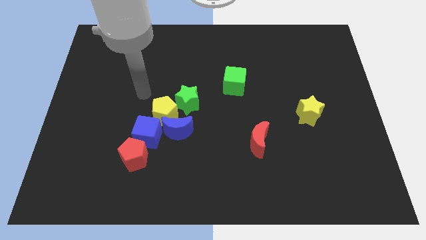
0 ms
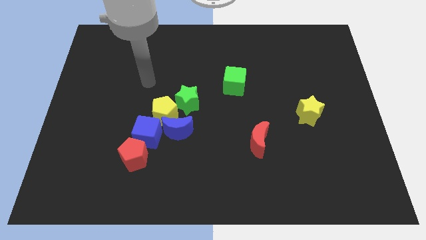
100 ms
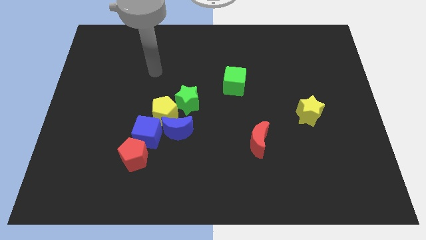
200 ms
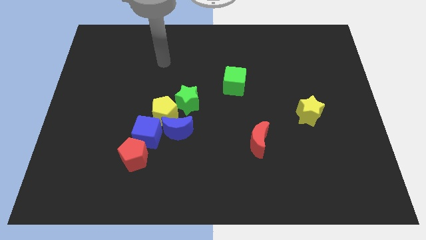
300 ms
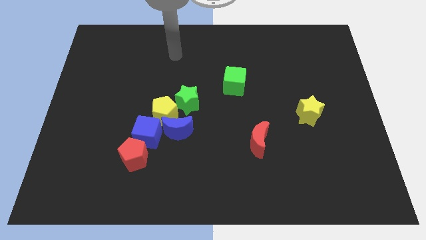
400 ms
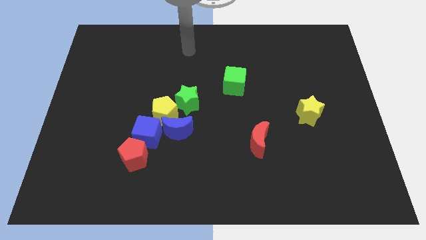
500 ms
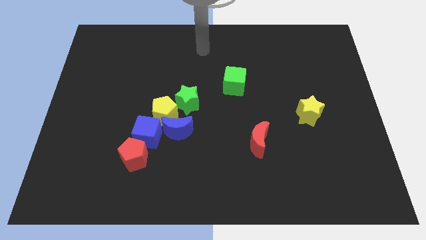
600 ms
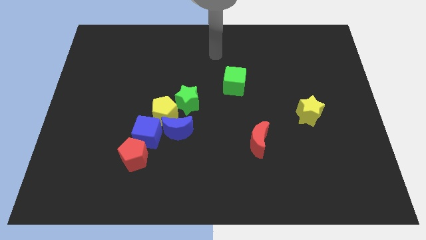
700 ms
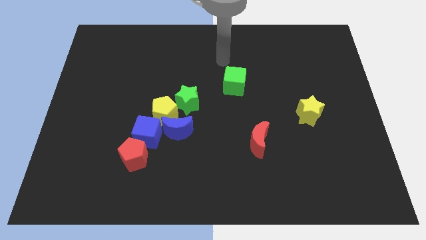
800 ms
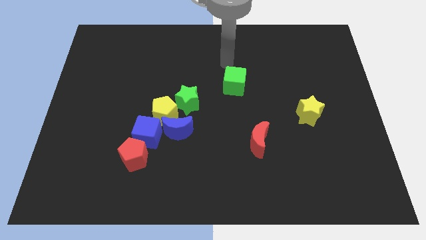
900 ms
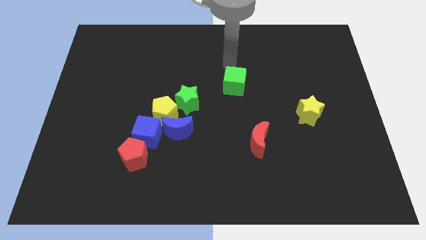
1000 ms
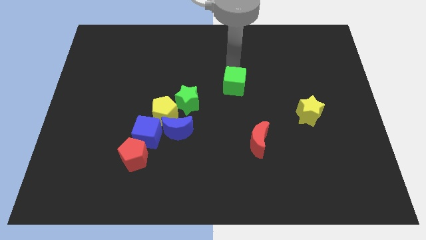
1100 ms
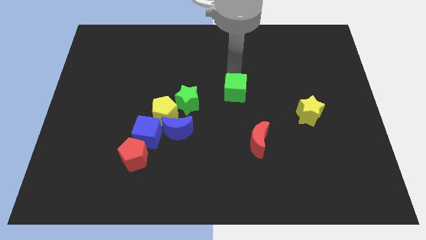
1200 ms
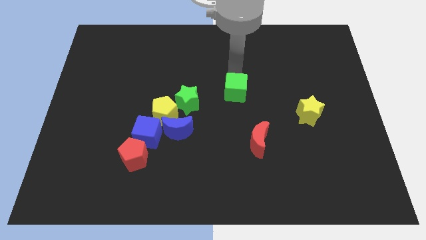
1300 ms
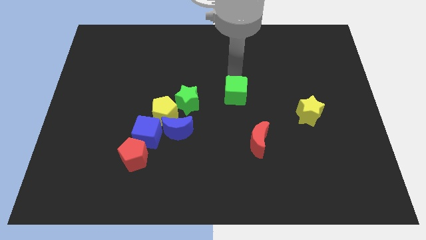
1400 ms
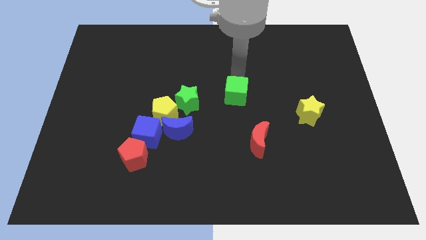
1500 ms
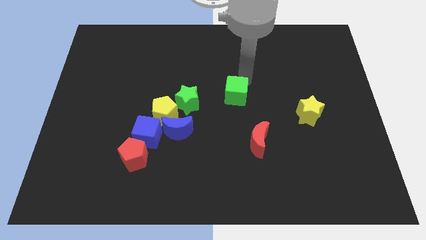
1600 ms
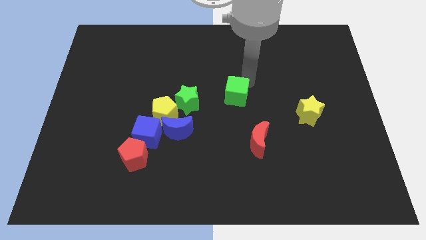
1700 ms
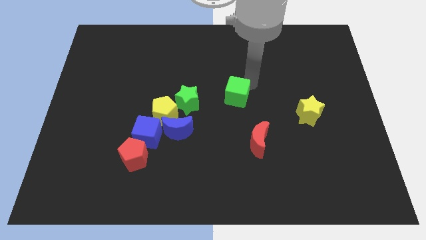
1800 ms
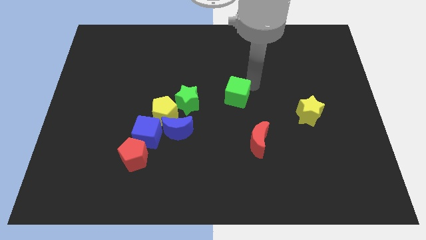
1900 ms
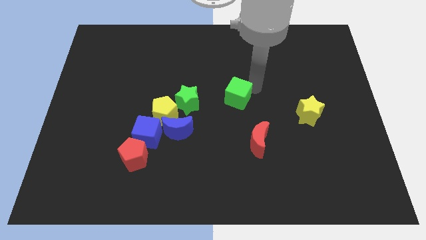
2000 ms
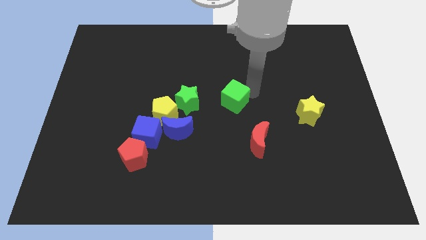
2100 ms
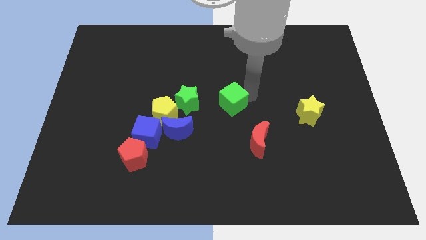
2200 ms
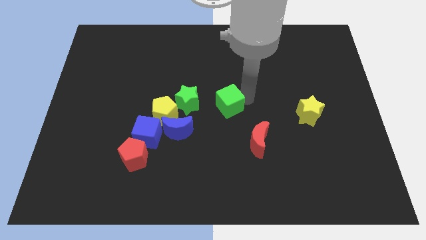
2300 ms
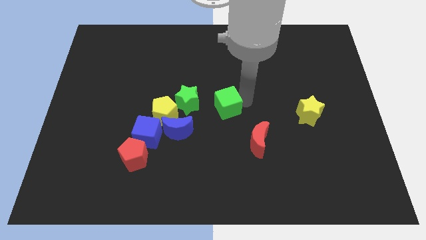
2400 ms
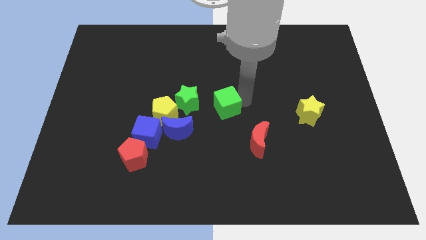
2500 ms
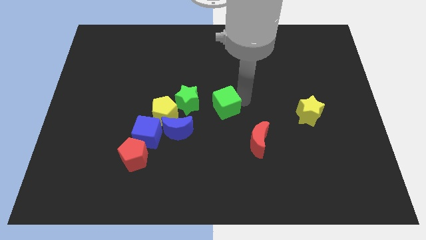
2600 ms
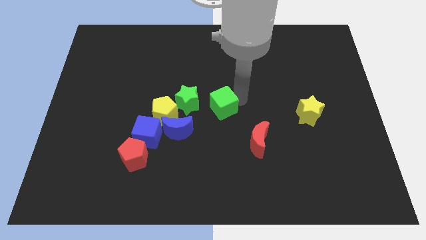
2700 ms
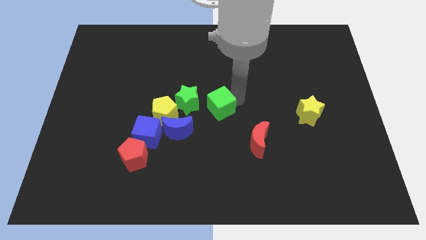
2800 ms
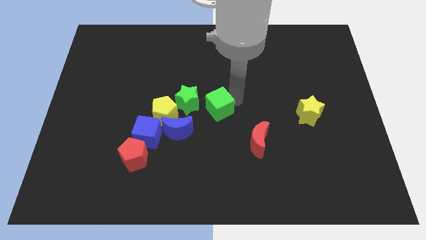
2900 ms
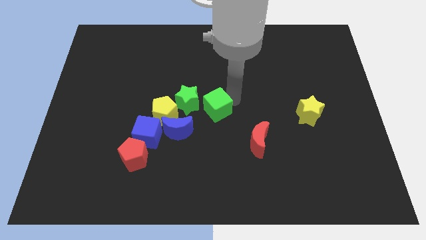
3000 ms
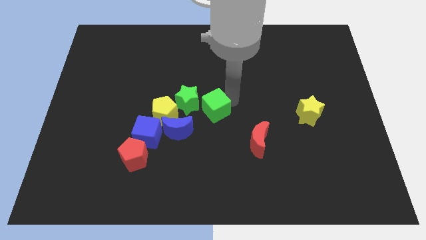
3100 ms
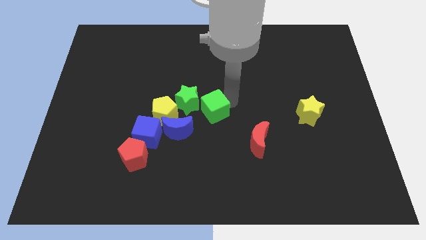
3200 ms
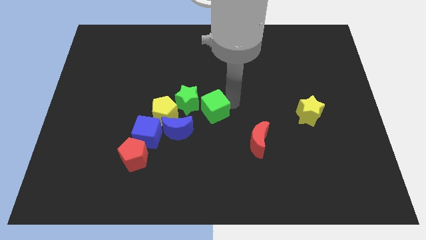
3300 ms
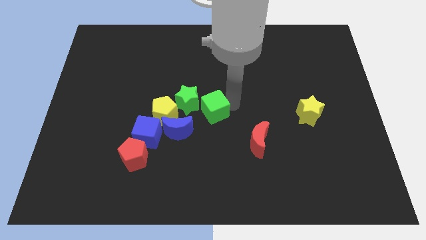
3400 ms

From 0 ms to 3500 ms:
move the green cube diagonally on the top right side of the blue moon

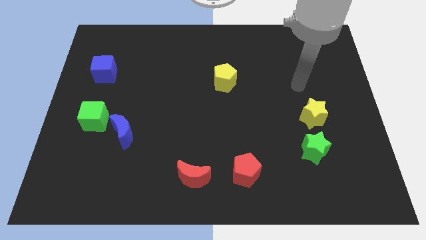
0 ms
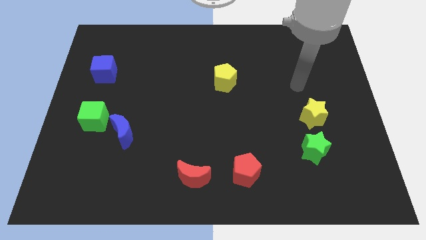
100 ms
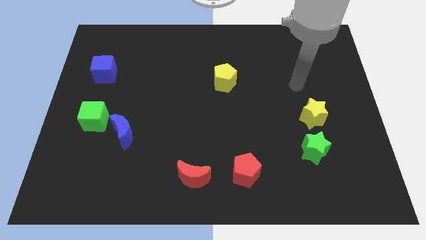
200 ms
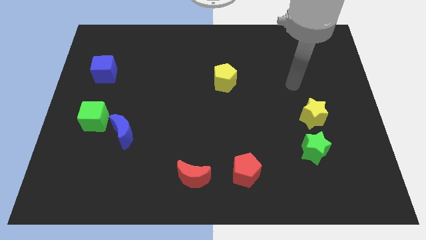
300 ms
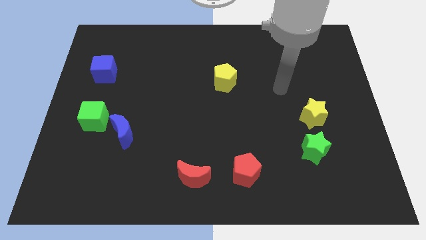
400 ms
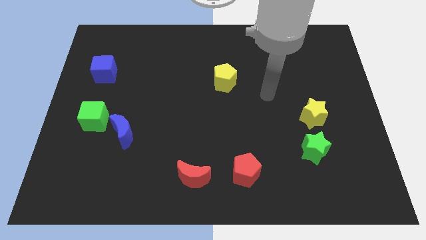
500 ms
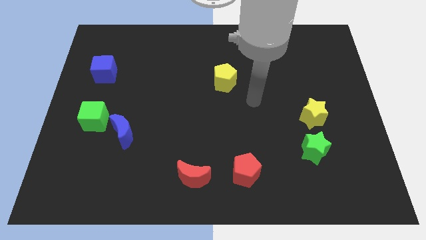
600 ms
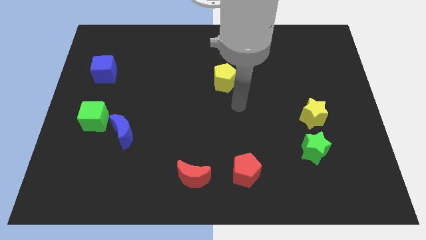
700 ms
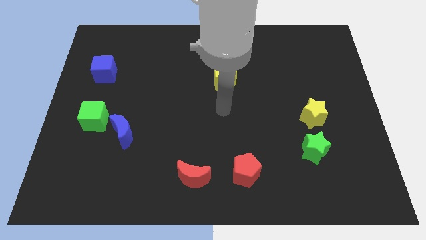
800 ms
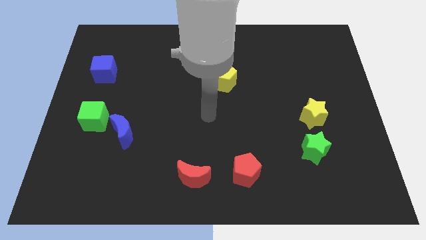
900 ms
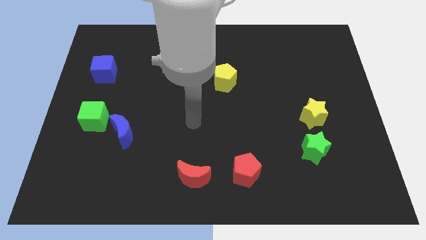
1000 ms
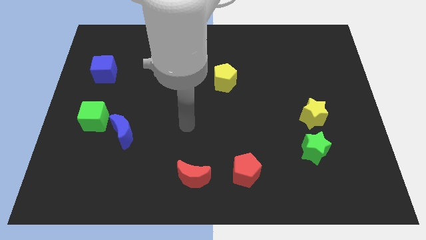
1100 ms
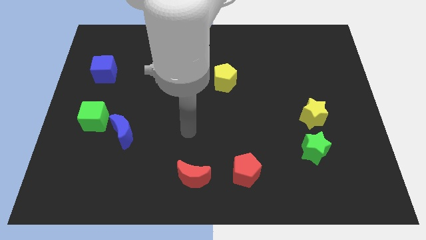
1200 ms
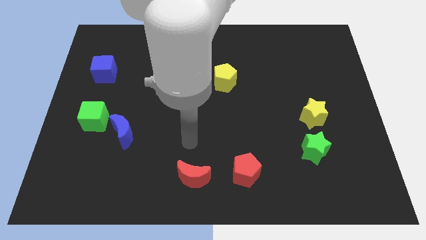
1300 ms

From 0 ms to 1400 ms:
place your arm above the red crescent

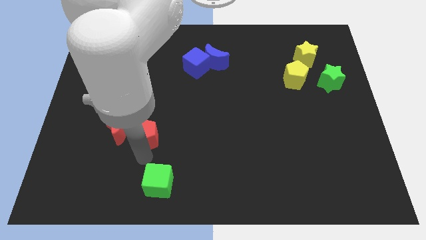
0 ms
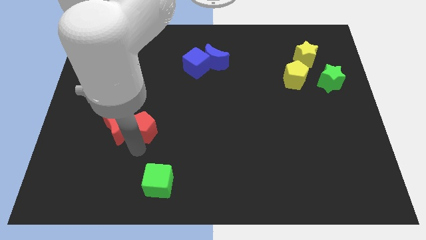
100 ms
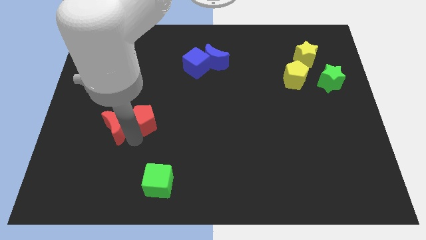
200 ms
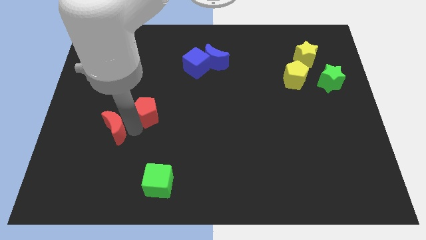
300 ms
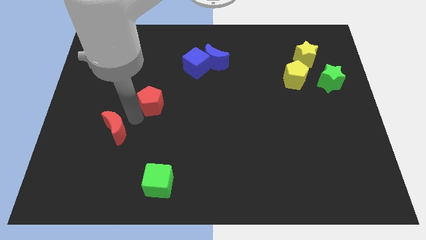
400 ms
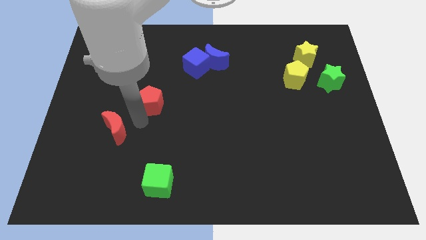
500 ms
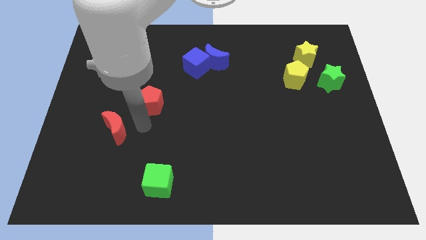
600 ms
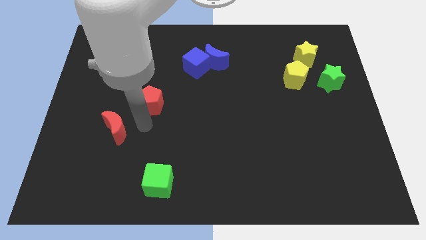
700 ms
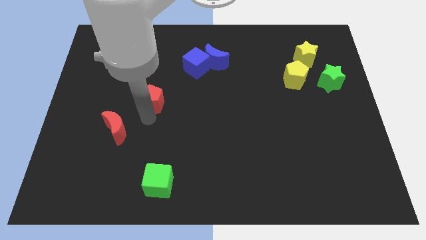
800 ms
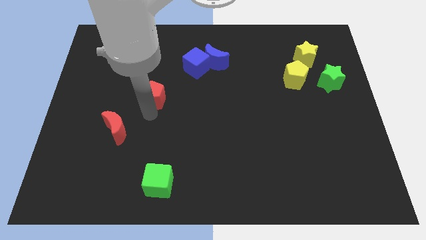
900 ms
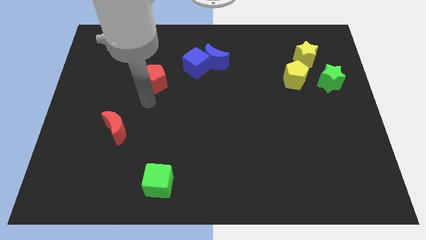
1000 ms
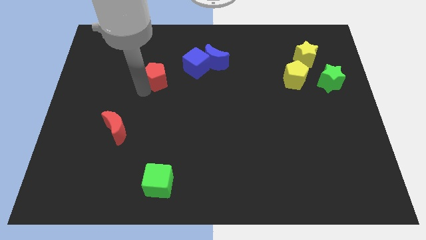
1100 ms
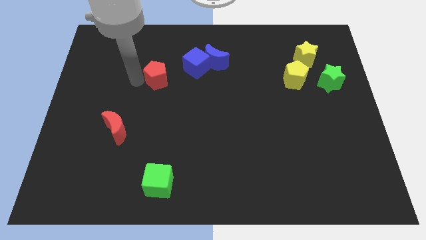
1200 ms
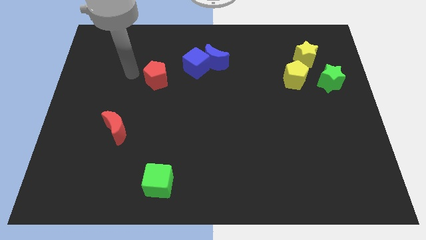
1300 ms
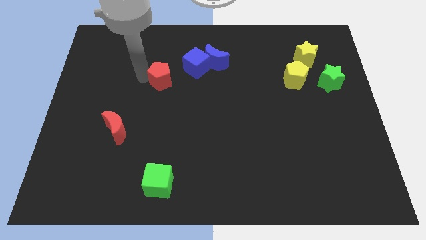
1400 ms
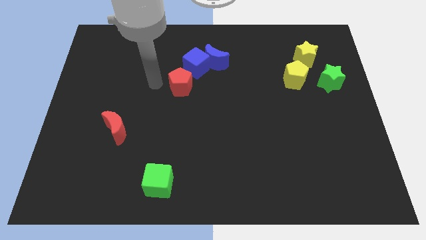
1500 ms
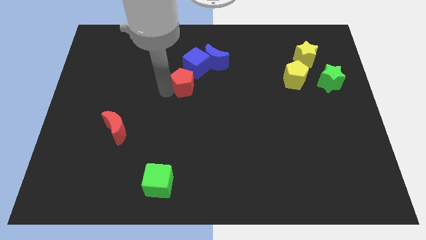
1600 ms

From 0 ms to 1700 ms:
move the red pentagon close to the blue cube

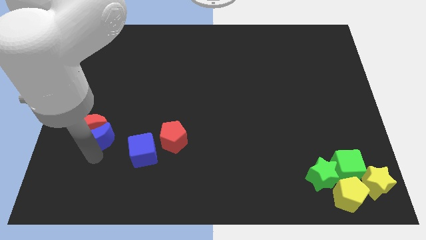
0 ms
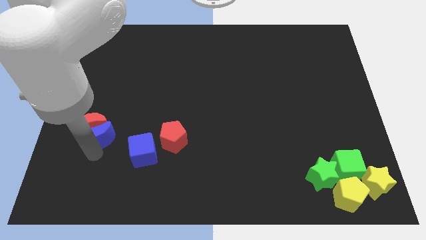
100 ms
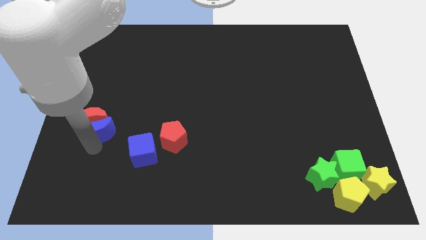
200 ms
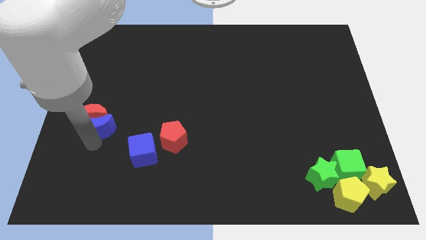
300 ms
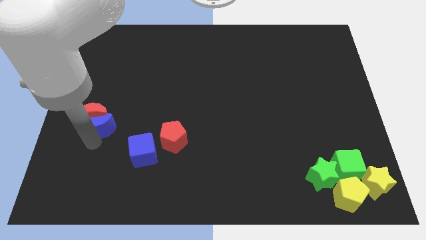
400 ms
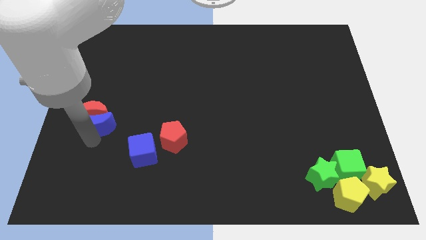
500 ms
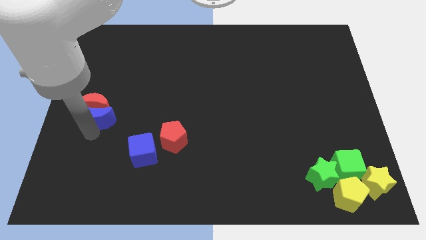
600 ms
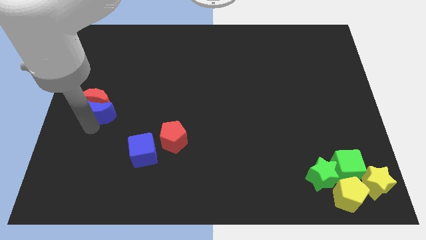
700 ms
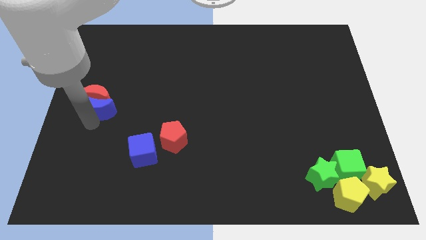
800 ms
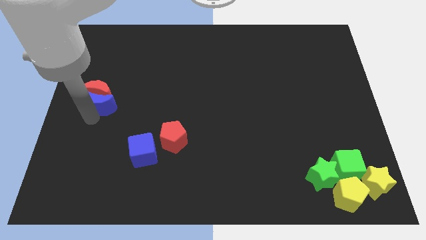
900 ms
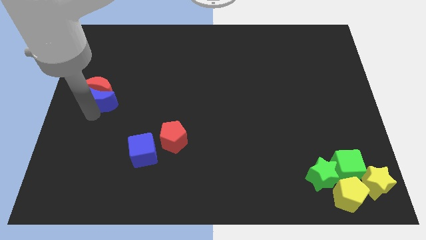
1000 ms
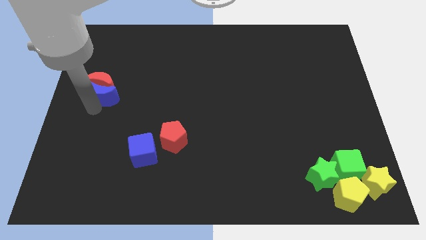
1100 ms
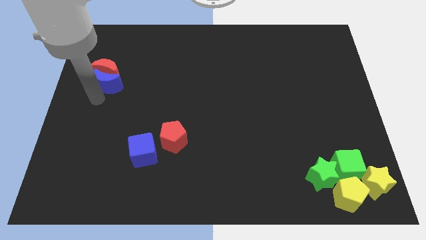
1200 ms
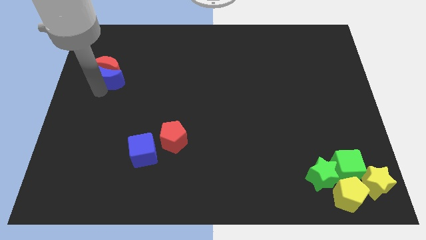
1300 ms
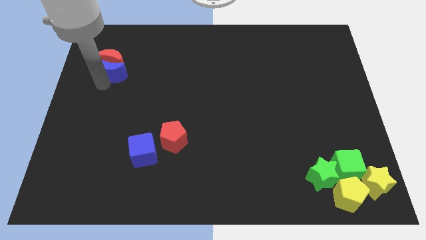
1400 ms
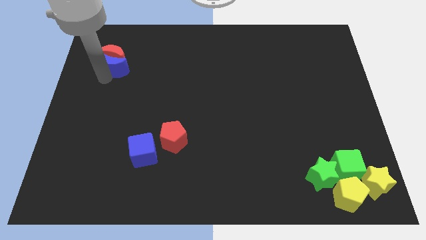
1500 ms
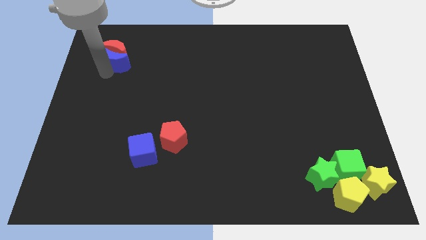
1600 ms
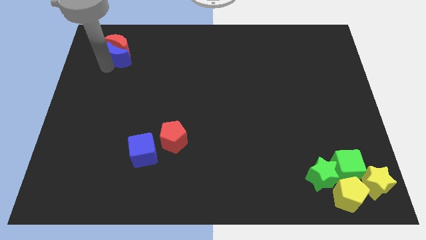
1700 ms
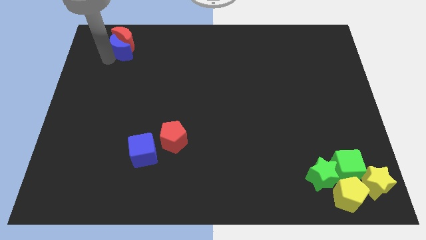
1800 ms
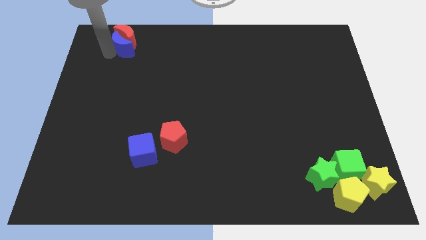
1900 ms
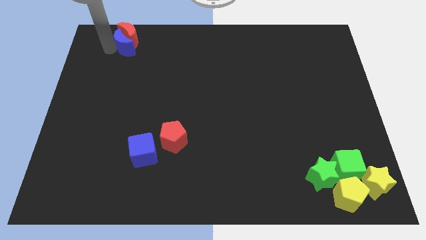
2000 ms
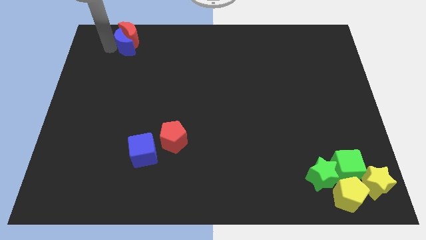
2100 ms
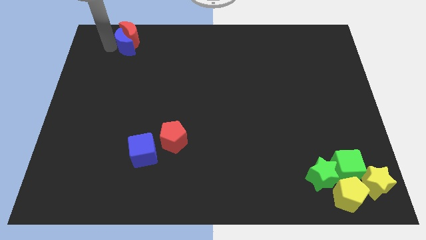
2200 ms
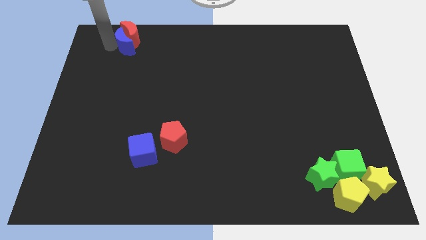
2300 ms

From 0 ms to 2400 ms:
move the red and blue moons to the top left
